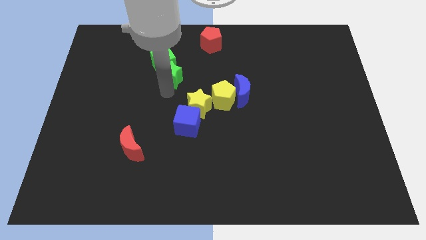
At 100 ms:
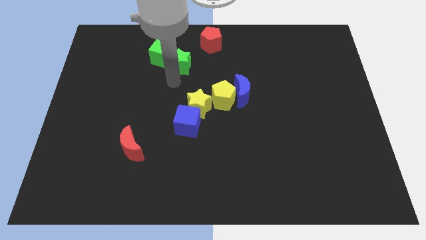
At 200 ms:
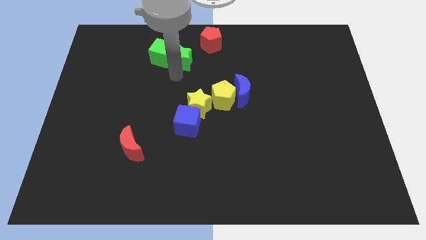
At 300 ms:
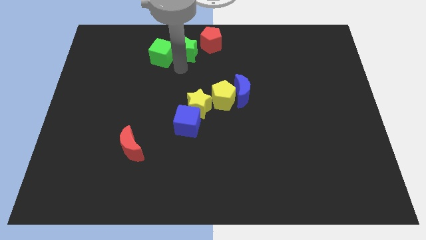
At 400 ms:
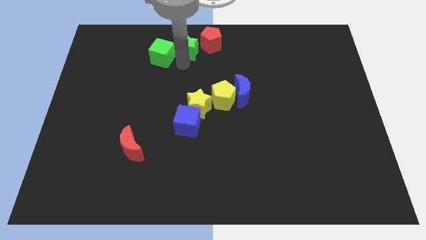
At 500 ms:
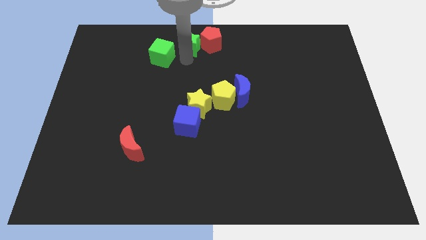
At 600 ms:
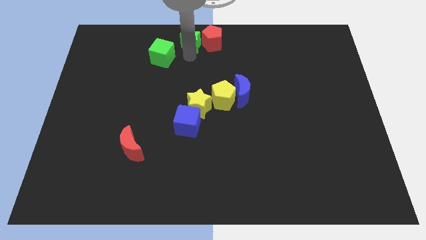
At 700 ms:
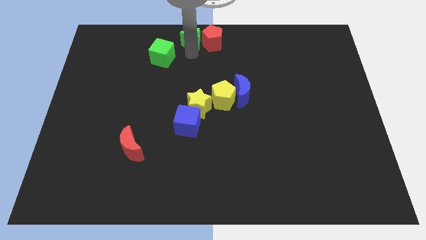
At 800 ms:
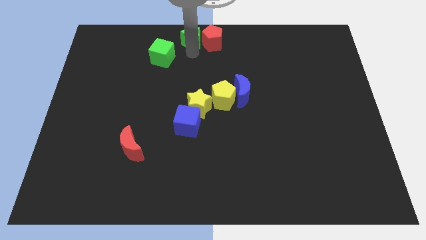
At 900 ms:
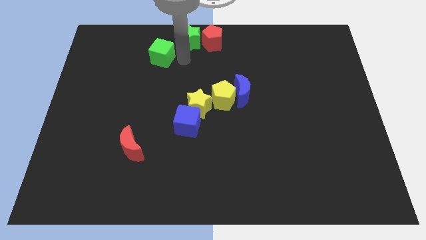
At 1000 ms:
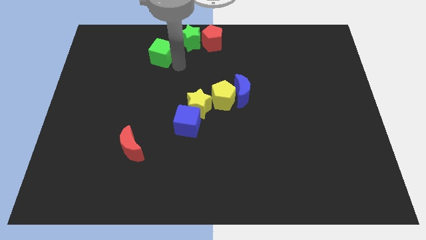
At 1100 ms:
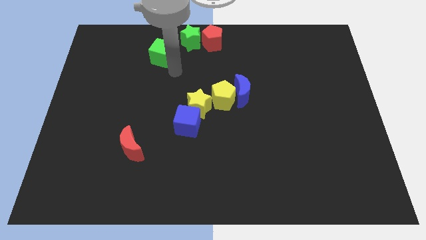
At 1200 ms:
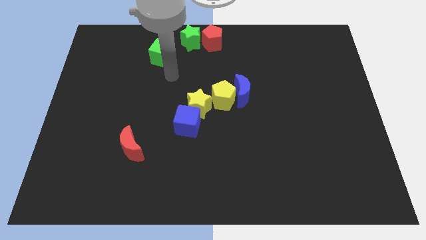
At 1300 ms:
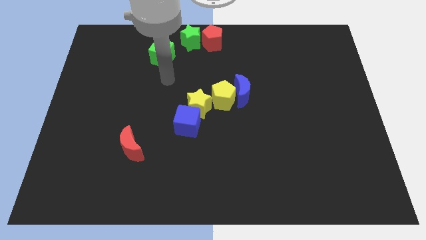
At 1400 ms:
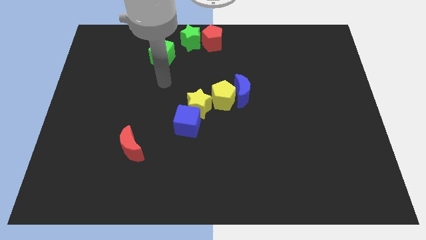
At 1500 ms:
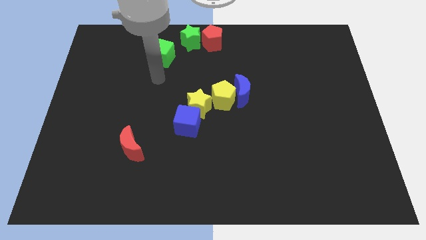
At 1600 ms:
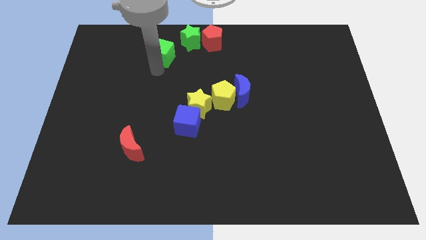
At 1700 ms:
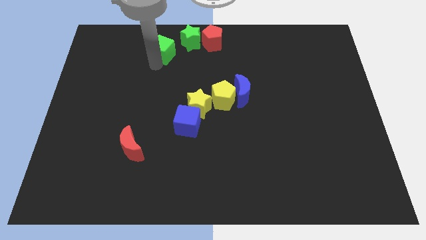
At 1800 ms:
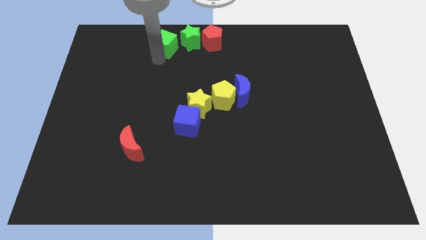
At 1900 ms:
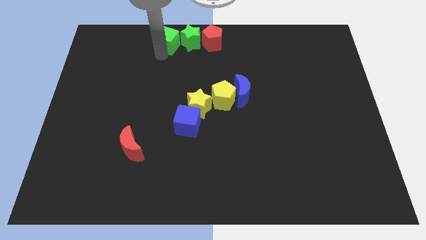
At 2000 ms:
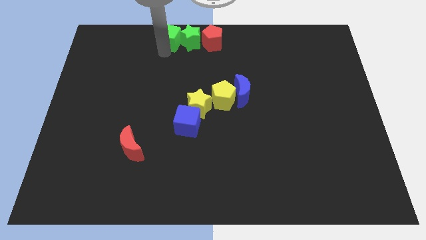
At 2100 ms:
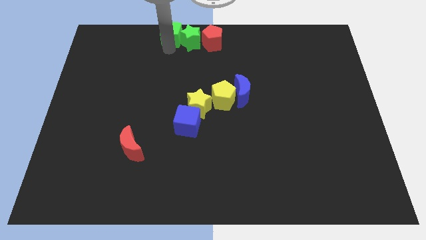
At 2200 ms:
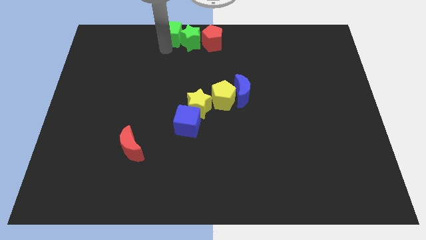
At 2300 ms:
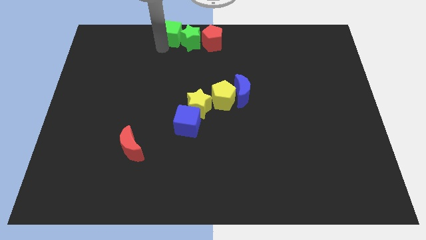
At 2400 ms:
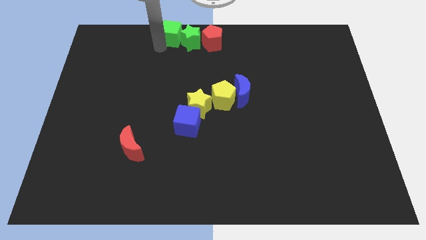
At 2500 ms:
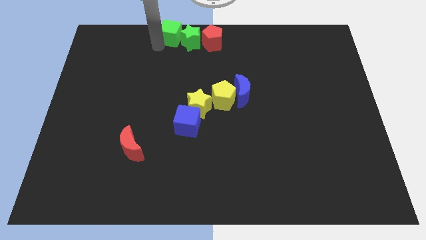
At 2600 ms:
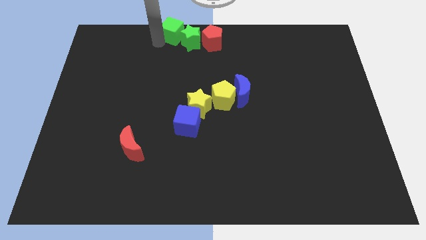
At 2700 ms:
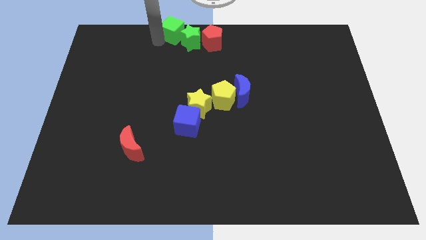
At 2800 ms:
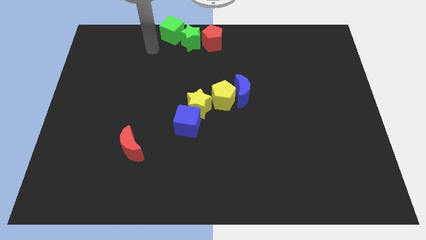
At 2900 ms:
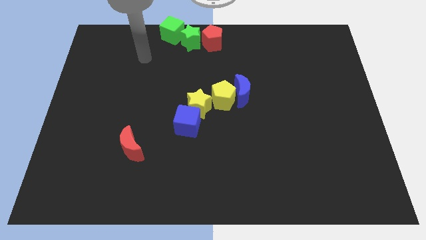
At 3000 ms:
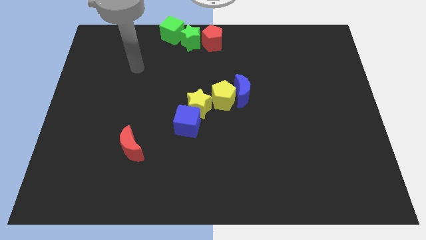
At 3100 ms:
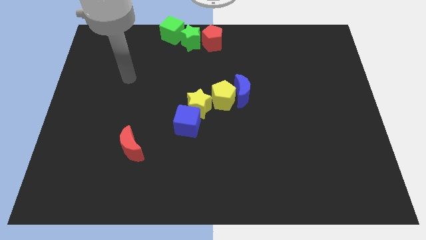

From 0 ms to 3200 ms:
place green blocks to the left side of the red pentagon

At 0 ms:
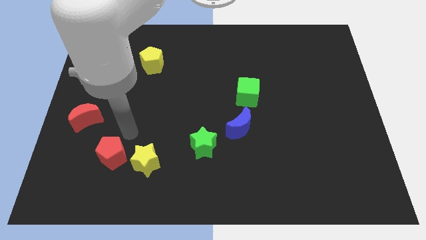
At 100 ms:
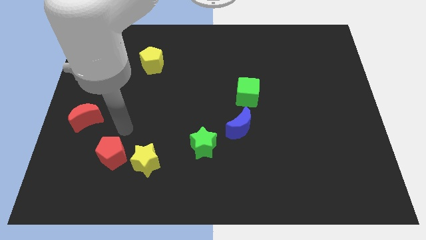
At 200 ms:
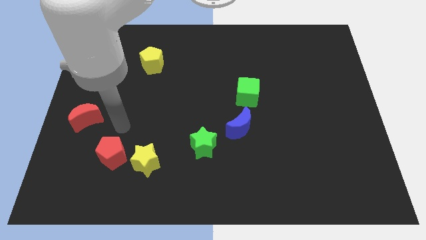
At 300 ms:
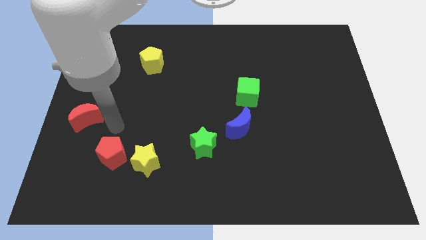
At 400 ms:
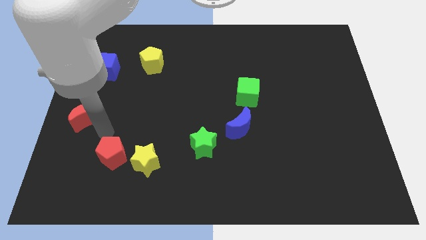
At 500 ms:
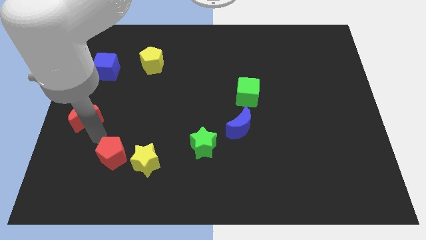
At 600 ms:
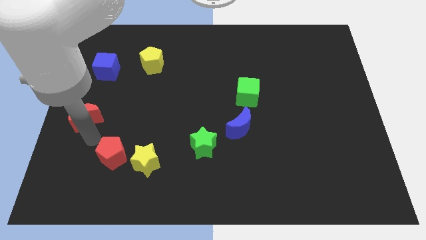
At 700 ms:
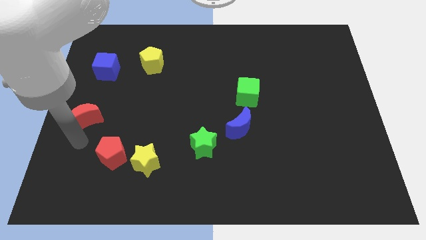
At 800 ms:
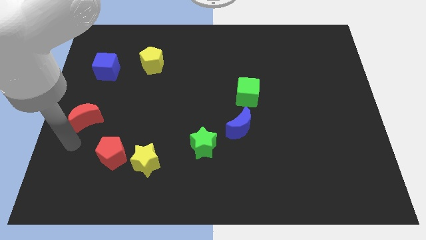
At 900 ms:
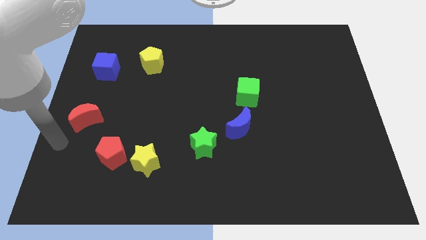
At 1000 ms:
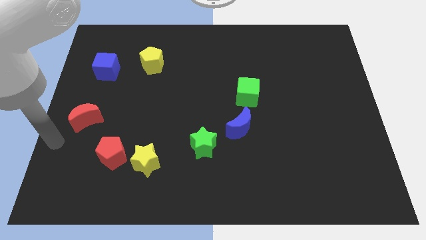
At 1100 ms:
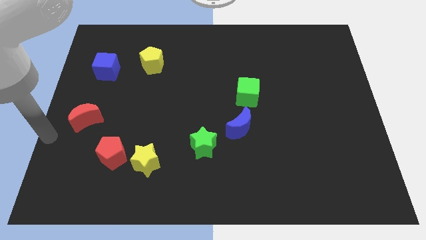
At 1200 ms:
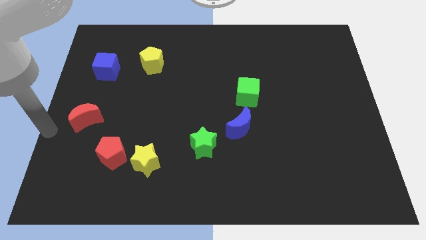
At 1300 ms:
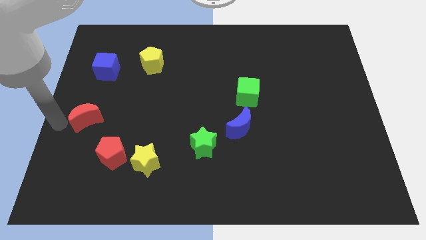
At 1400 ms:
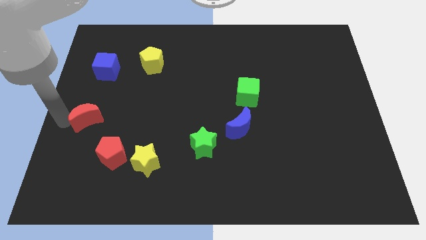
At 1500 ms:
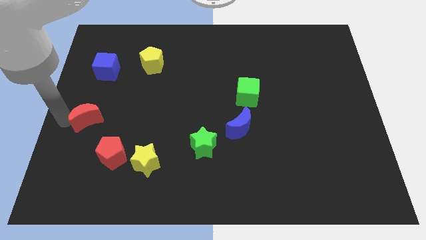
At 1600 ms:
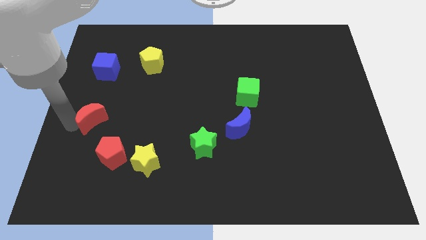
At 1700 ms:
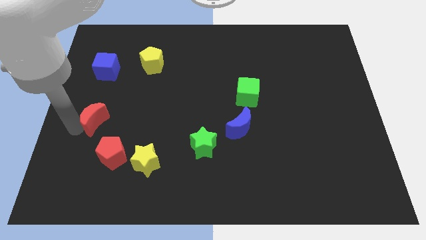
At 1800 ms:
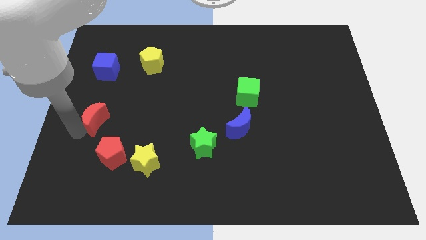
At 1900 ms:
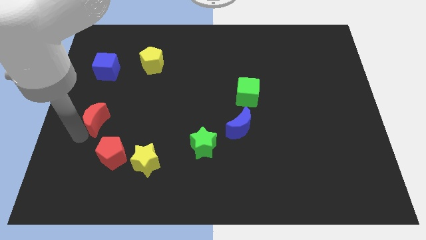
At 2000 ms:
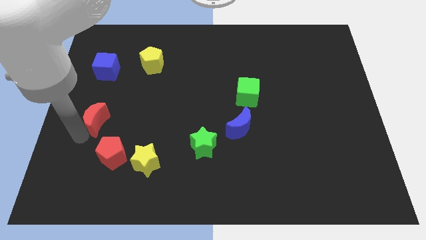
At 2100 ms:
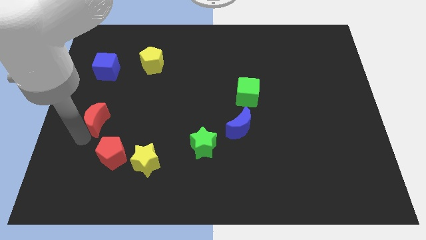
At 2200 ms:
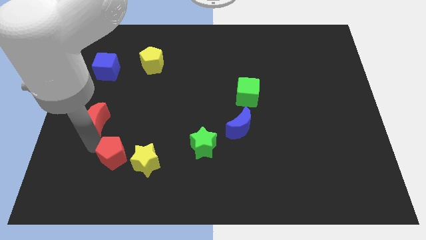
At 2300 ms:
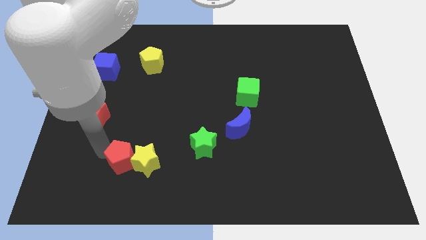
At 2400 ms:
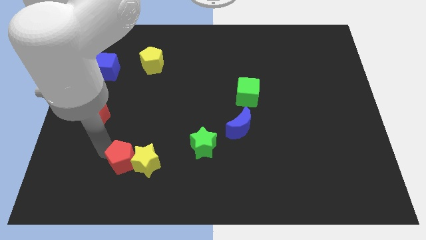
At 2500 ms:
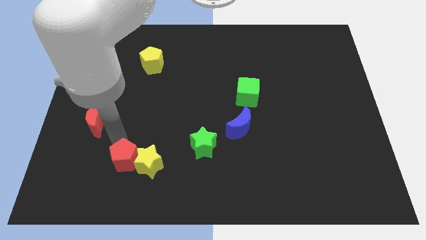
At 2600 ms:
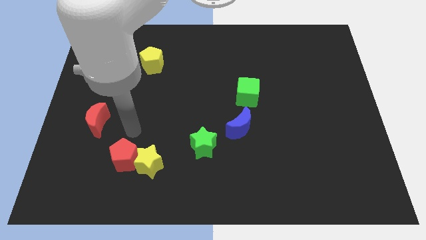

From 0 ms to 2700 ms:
push the red pentagon into the yellow star

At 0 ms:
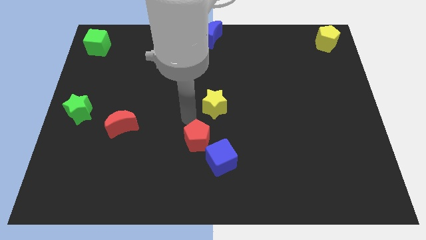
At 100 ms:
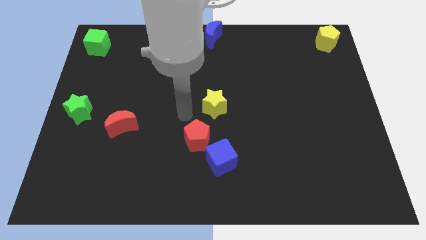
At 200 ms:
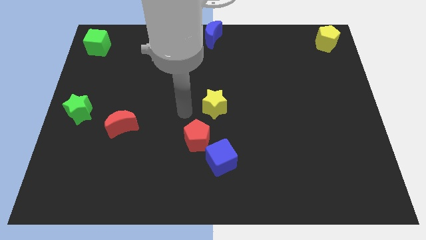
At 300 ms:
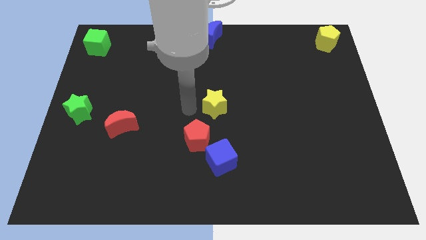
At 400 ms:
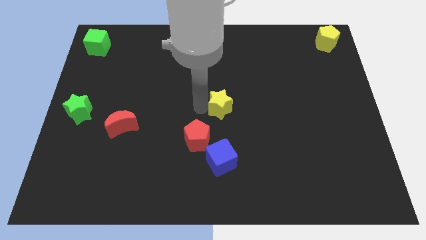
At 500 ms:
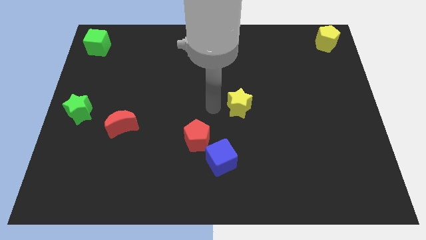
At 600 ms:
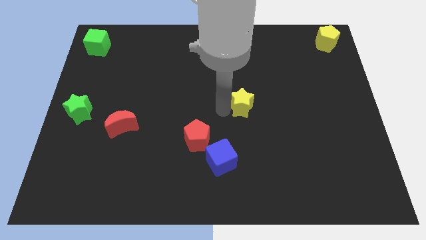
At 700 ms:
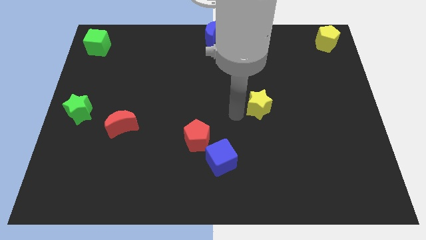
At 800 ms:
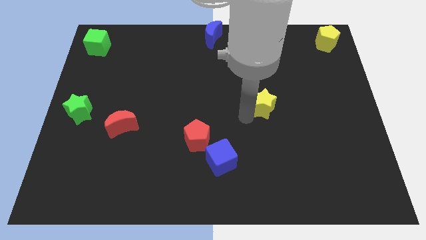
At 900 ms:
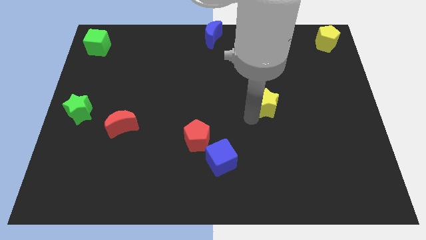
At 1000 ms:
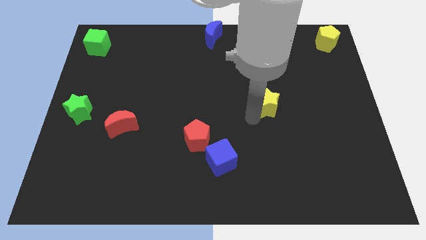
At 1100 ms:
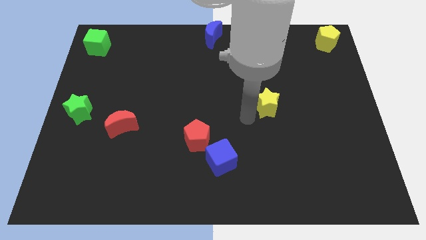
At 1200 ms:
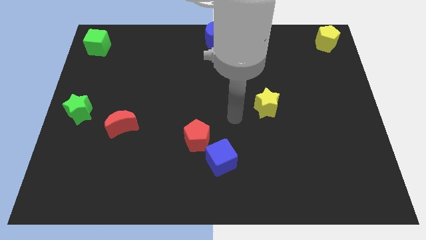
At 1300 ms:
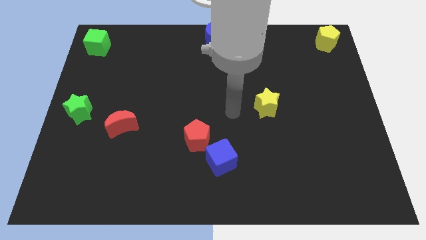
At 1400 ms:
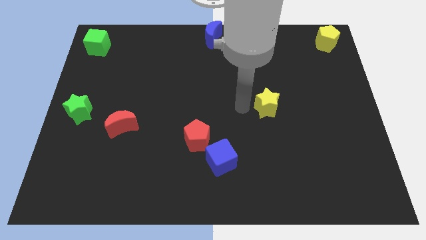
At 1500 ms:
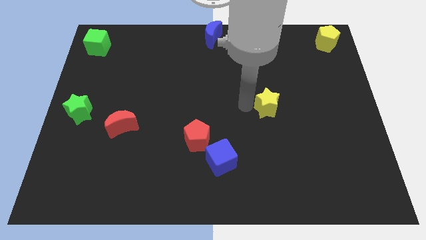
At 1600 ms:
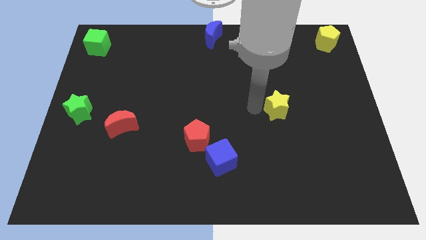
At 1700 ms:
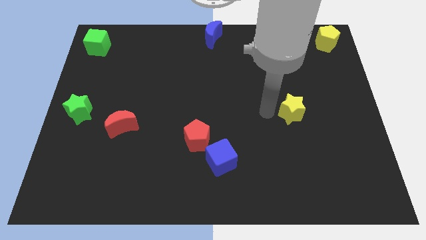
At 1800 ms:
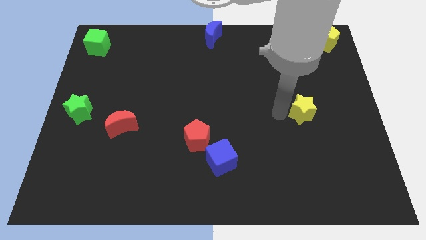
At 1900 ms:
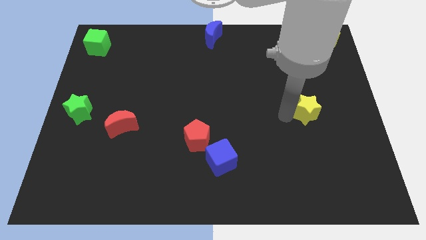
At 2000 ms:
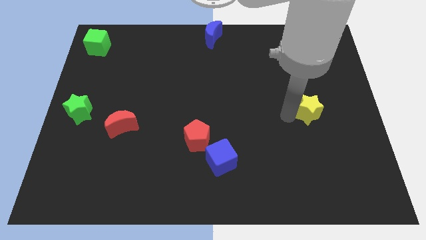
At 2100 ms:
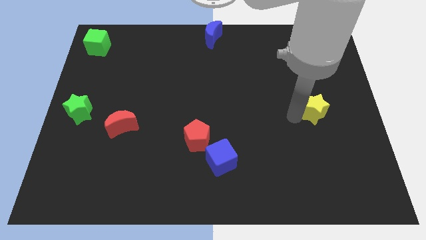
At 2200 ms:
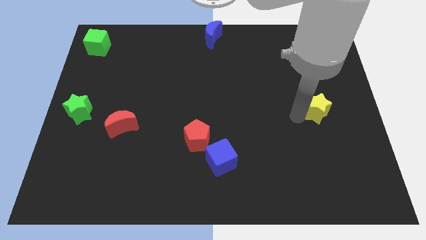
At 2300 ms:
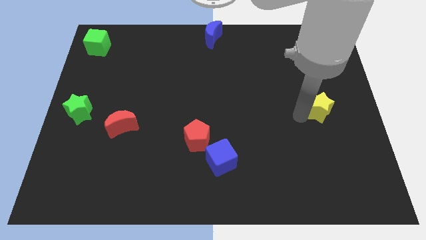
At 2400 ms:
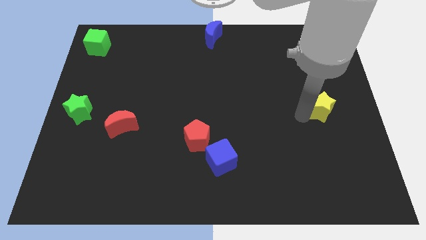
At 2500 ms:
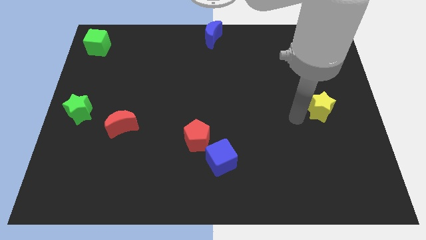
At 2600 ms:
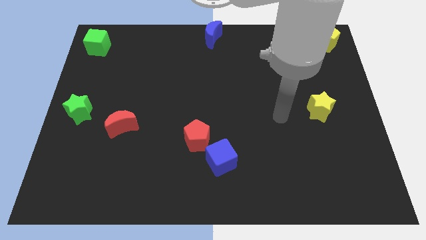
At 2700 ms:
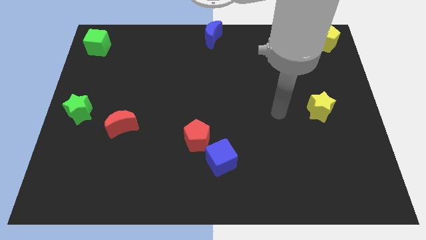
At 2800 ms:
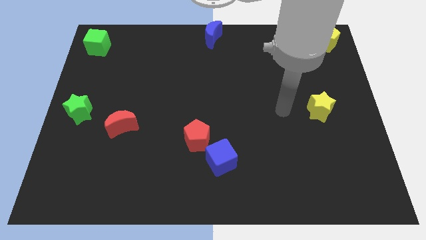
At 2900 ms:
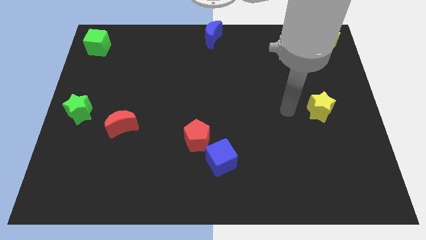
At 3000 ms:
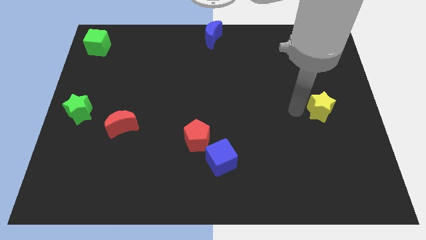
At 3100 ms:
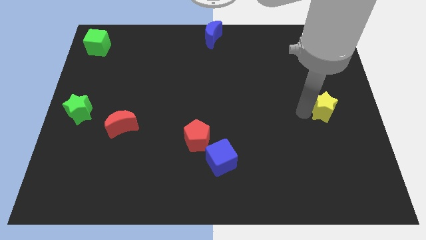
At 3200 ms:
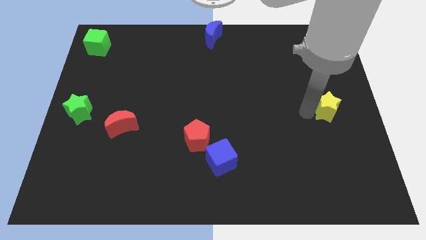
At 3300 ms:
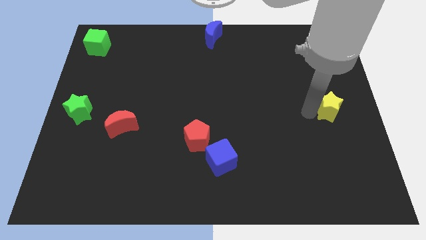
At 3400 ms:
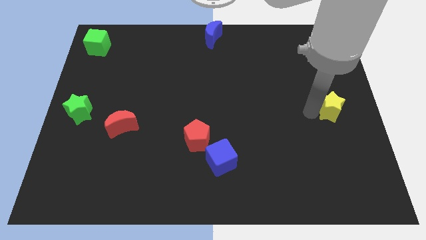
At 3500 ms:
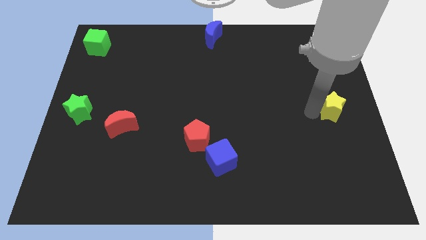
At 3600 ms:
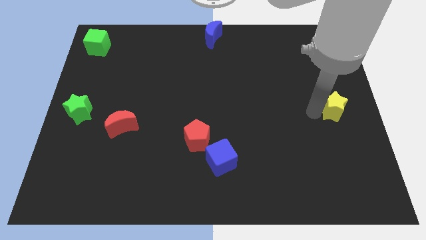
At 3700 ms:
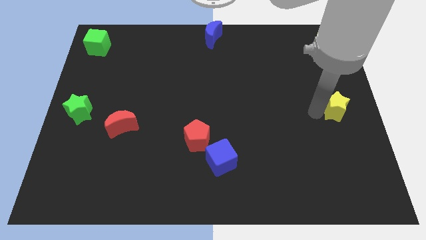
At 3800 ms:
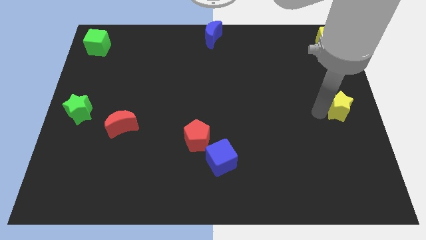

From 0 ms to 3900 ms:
place yellow star vertical to yellow pentagon
